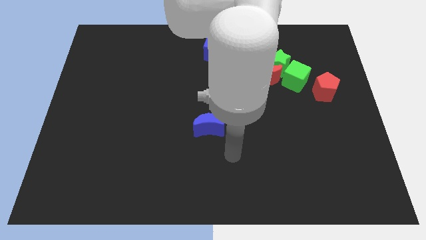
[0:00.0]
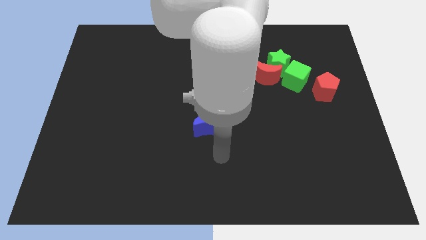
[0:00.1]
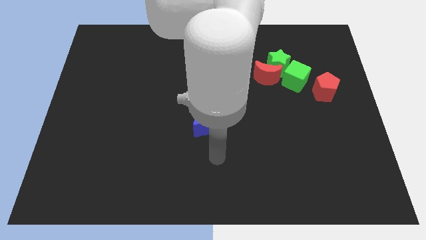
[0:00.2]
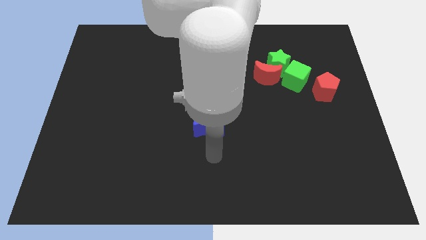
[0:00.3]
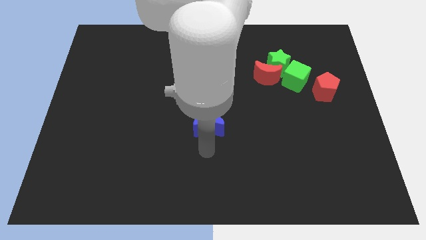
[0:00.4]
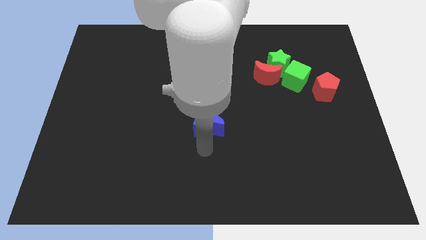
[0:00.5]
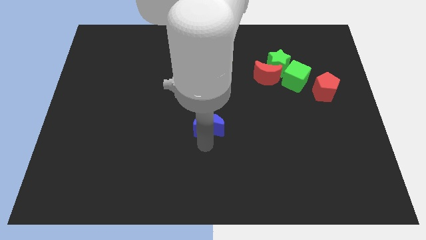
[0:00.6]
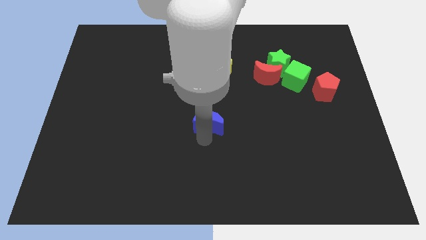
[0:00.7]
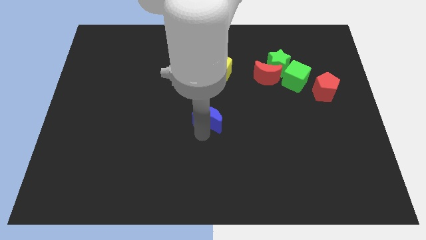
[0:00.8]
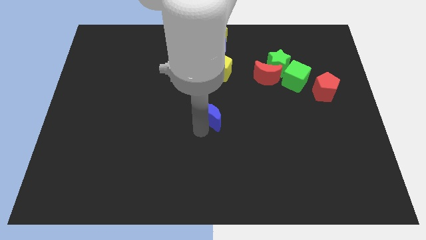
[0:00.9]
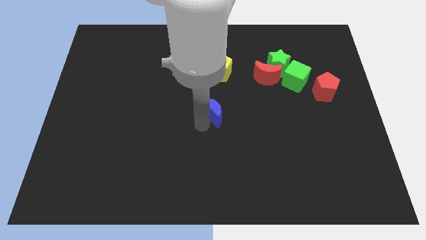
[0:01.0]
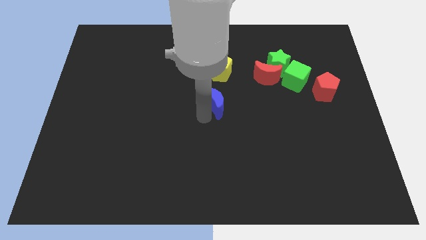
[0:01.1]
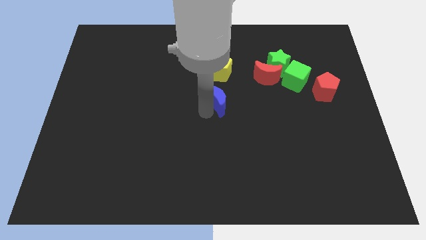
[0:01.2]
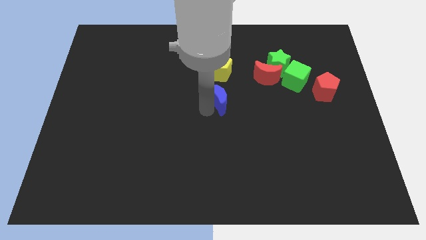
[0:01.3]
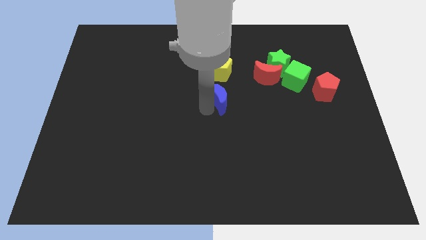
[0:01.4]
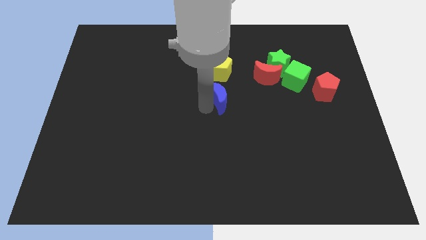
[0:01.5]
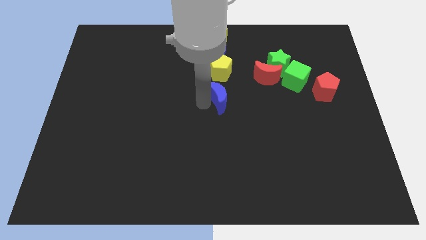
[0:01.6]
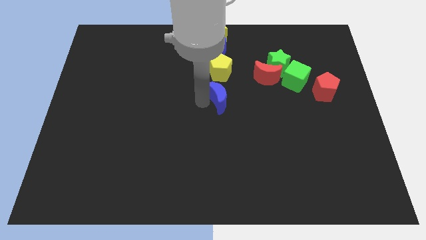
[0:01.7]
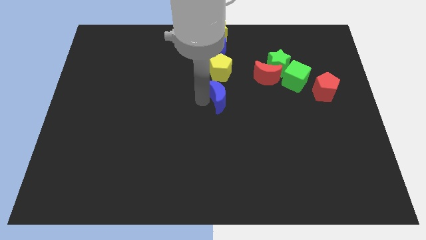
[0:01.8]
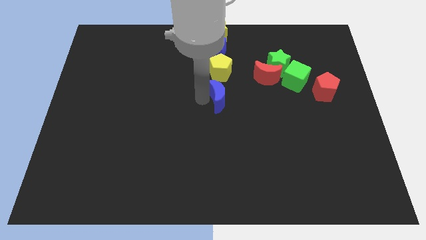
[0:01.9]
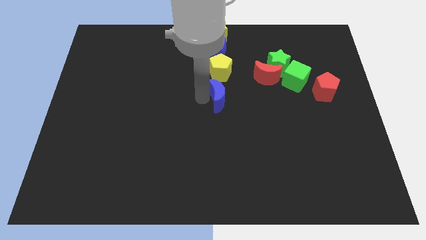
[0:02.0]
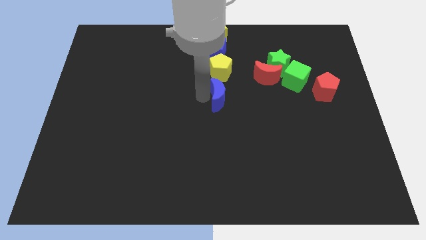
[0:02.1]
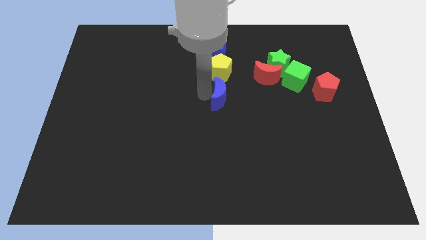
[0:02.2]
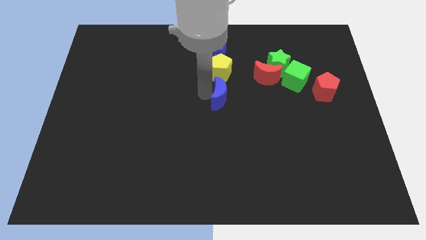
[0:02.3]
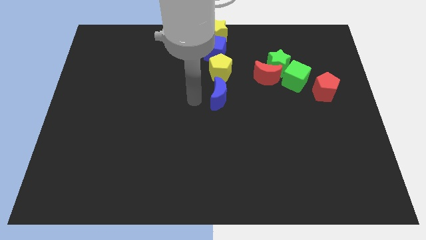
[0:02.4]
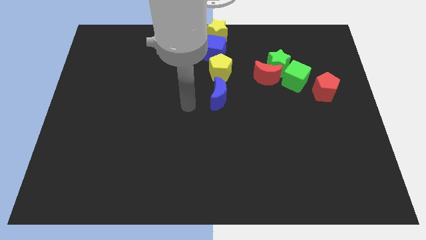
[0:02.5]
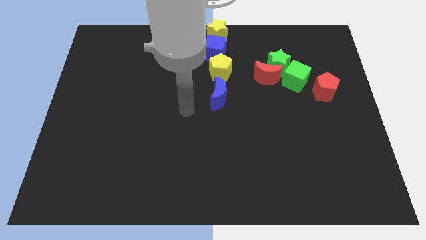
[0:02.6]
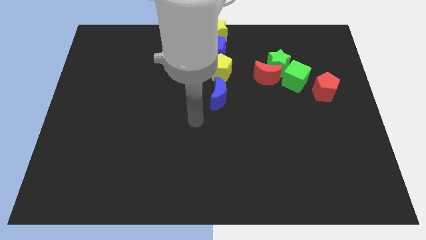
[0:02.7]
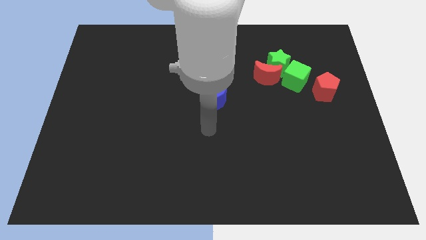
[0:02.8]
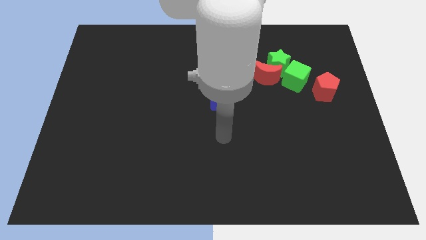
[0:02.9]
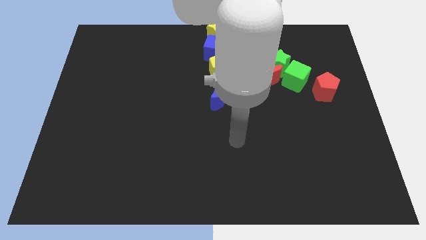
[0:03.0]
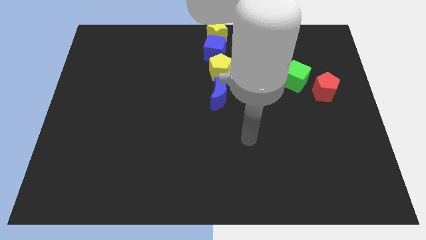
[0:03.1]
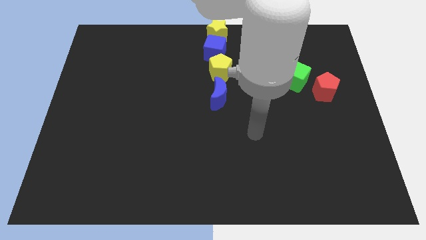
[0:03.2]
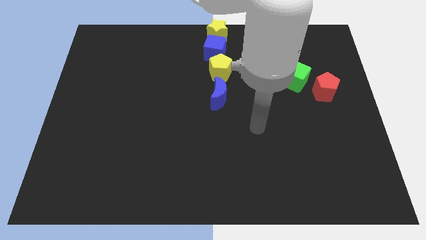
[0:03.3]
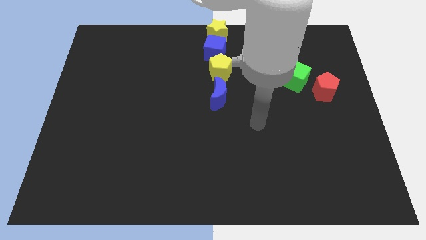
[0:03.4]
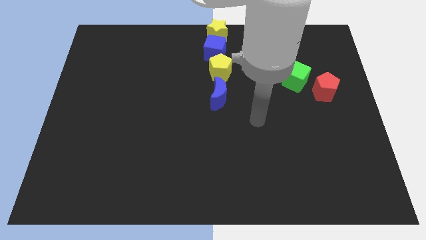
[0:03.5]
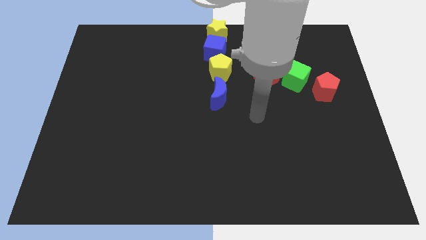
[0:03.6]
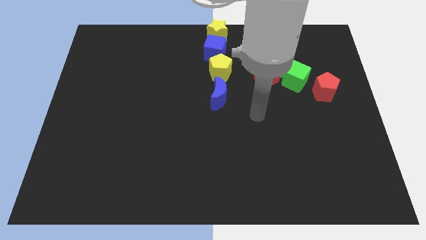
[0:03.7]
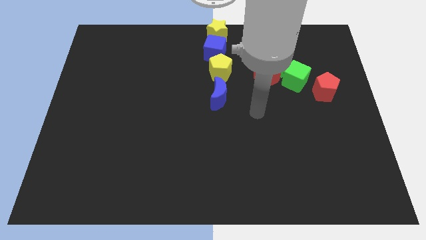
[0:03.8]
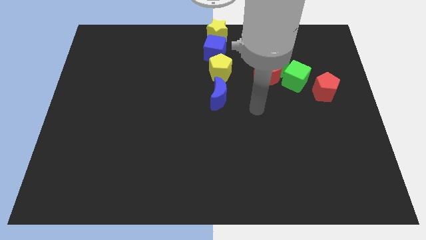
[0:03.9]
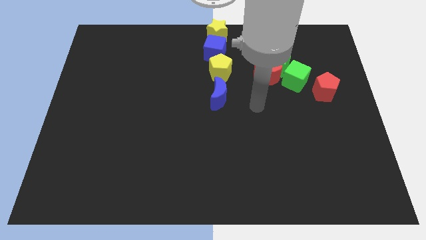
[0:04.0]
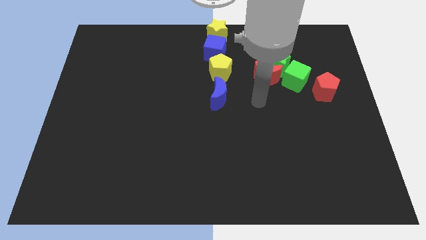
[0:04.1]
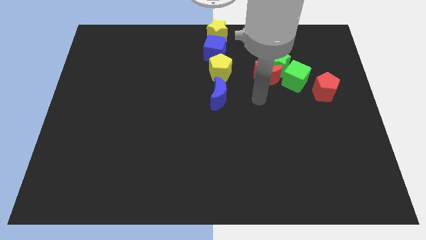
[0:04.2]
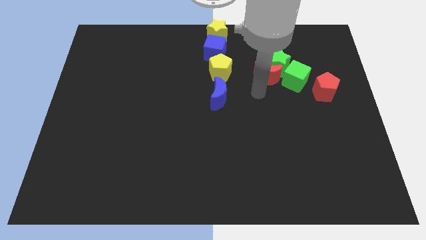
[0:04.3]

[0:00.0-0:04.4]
place the blue crescent to the bottom of yellow pentagon

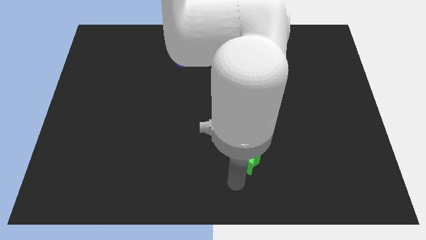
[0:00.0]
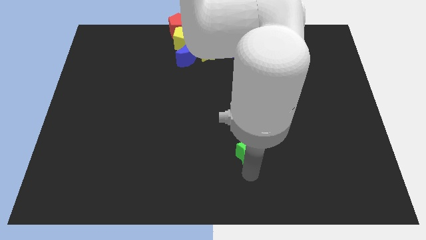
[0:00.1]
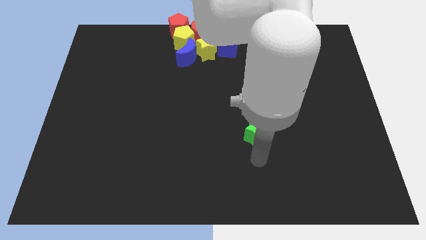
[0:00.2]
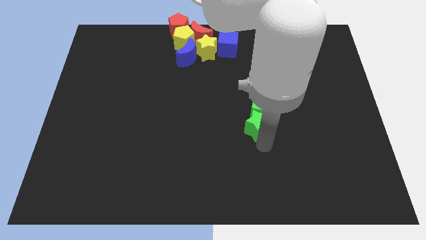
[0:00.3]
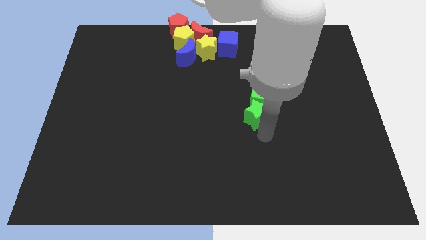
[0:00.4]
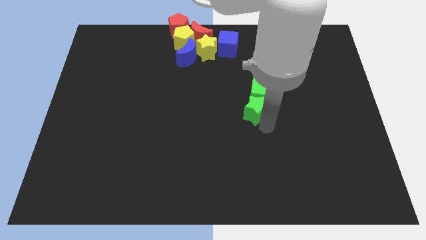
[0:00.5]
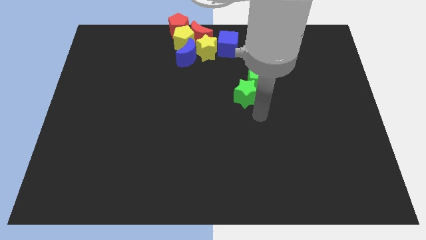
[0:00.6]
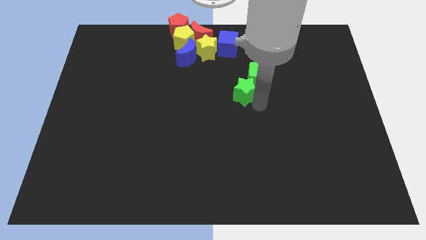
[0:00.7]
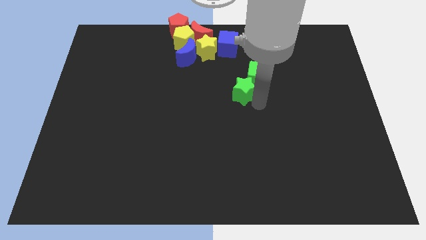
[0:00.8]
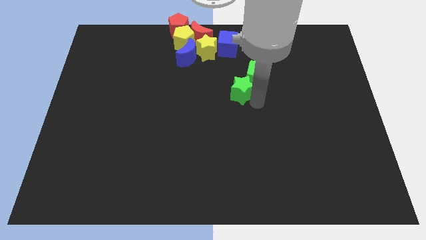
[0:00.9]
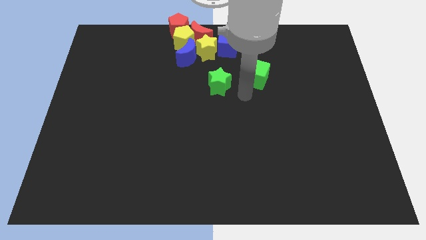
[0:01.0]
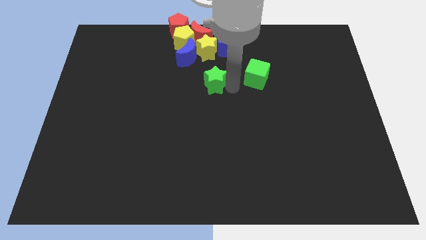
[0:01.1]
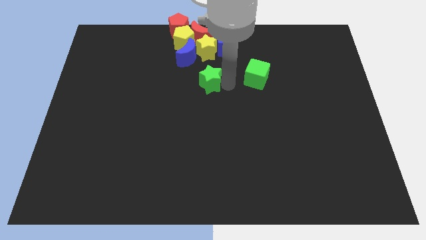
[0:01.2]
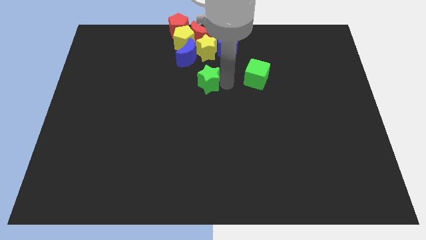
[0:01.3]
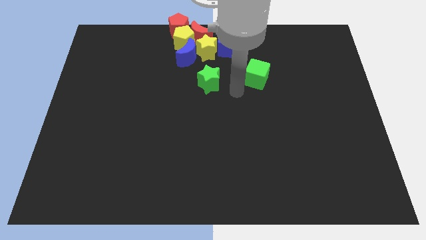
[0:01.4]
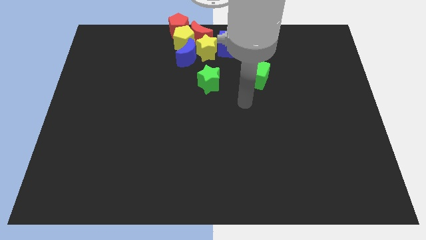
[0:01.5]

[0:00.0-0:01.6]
move the green star below the group of blocks

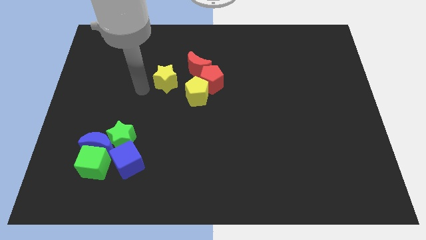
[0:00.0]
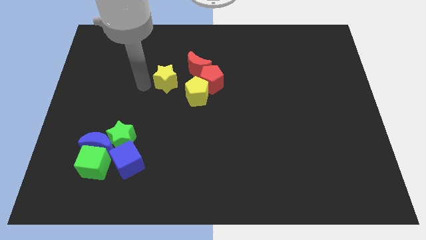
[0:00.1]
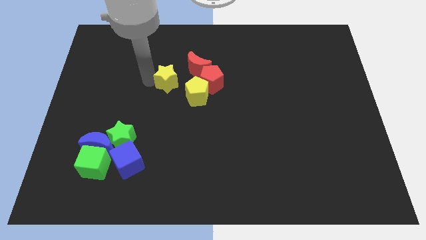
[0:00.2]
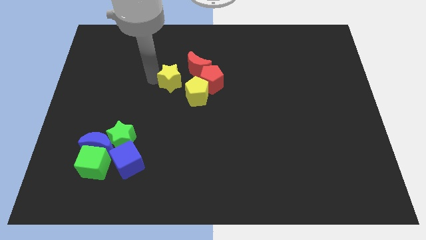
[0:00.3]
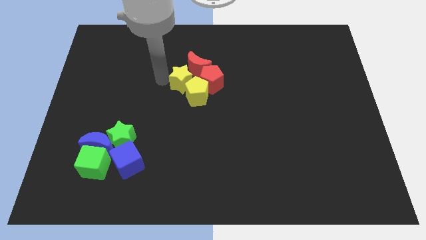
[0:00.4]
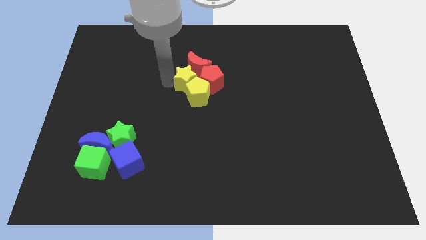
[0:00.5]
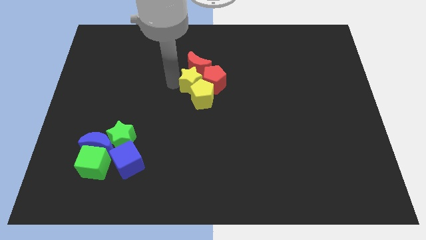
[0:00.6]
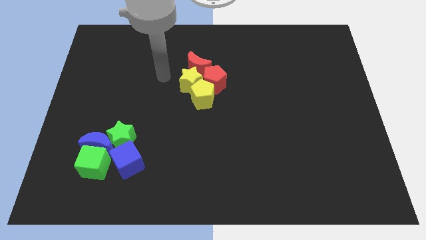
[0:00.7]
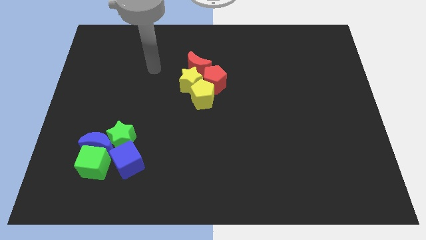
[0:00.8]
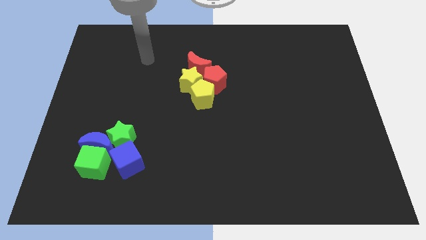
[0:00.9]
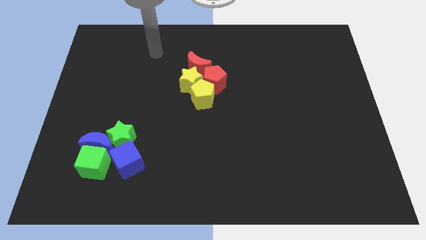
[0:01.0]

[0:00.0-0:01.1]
push the yellow star into yellow pentagon

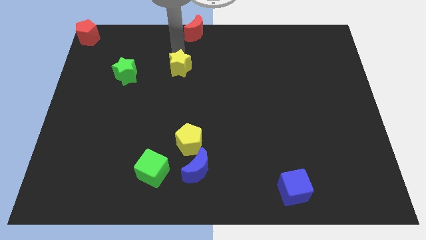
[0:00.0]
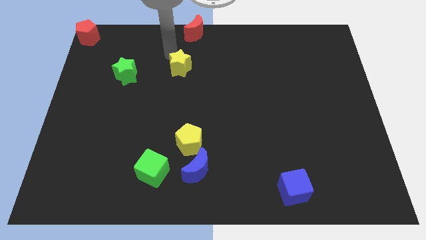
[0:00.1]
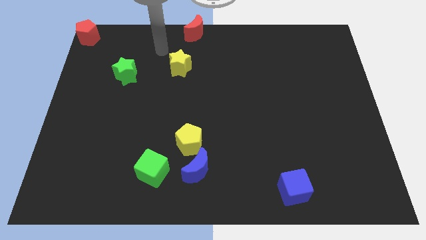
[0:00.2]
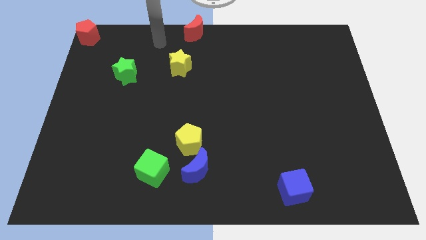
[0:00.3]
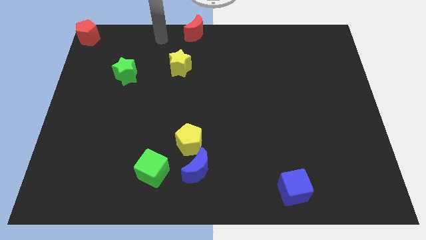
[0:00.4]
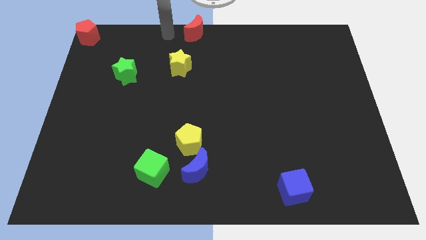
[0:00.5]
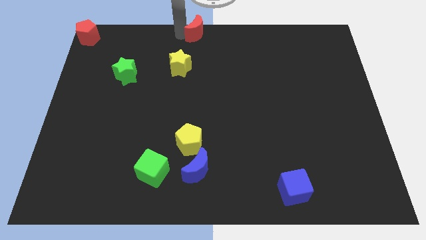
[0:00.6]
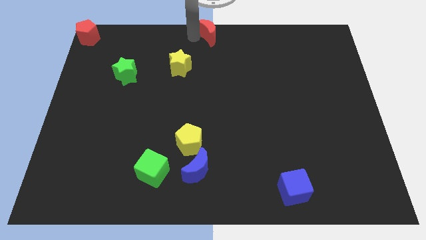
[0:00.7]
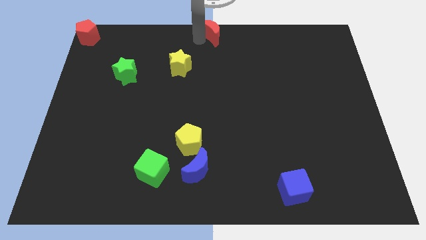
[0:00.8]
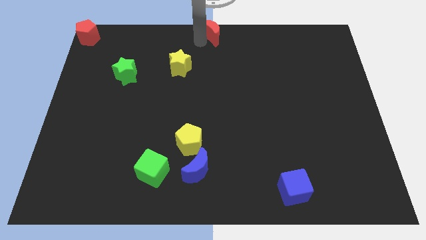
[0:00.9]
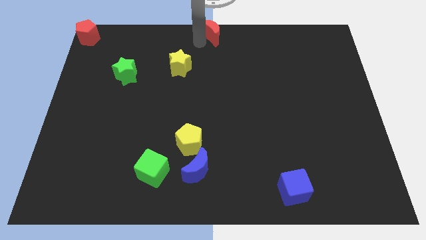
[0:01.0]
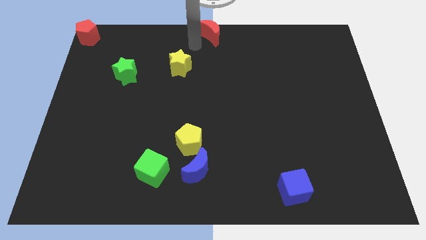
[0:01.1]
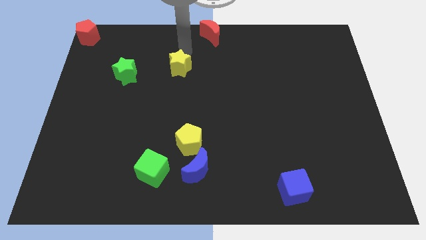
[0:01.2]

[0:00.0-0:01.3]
place the red crescent at the top center of the board

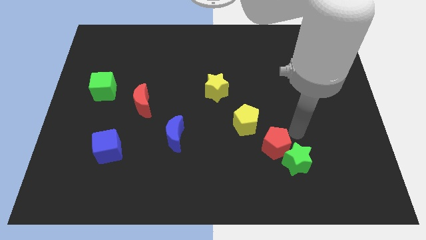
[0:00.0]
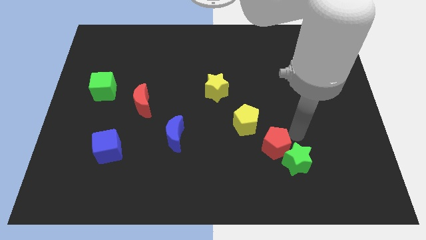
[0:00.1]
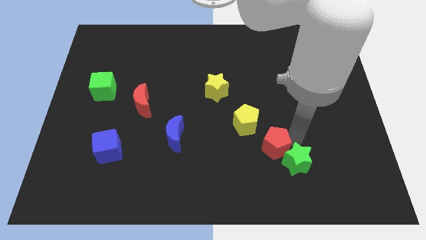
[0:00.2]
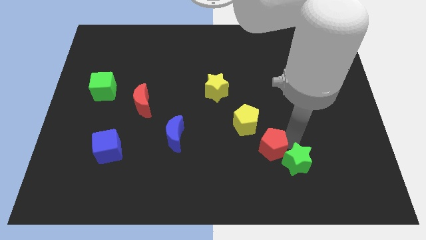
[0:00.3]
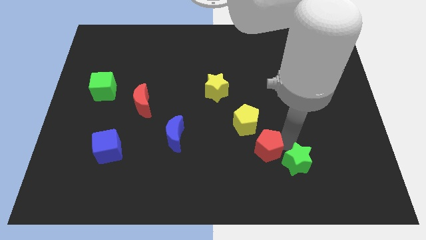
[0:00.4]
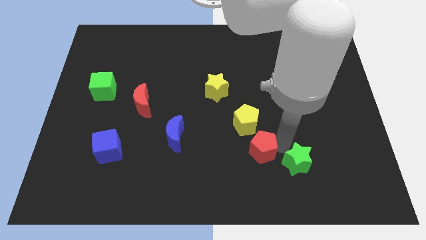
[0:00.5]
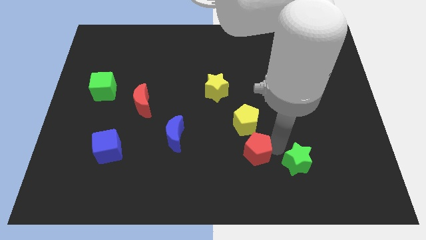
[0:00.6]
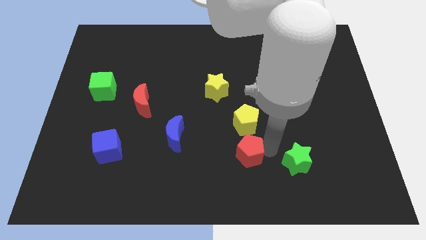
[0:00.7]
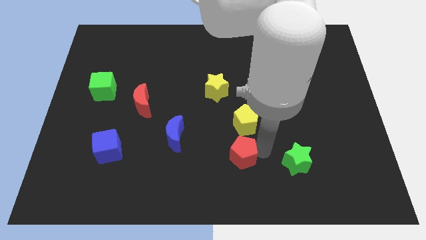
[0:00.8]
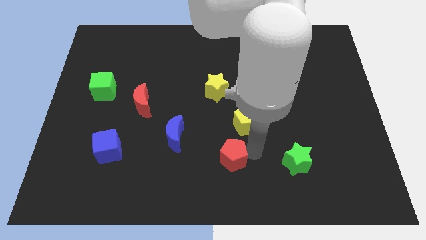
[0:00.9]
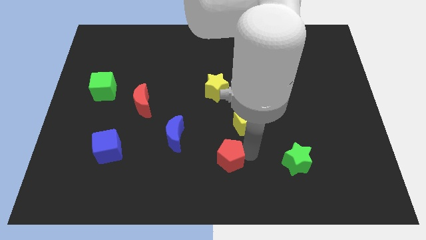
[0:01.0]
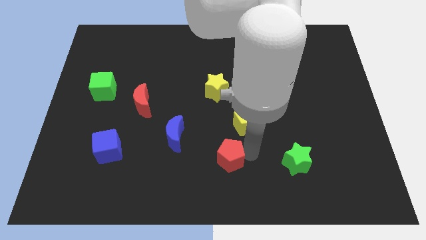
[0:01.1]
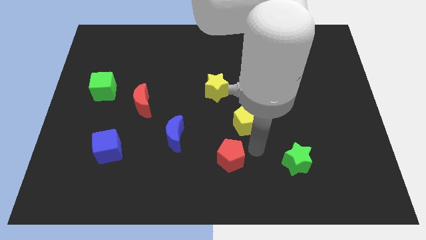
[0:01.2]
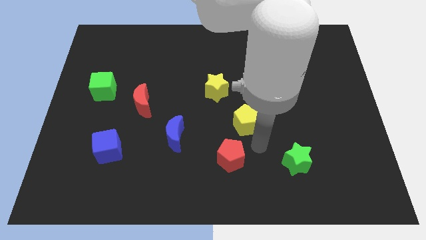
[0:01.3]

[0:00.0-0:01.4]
push the red pentagon below yellow pentagon
